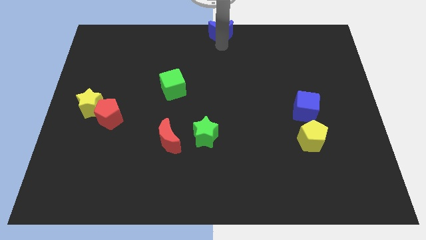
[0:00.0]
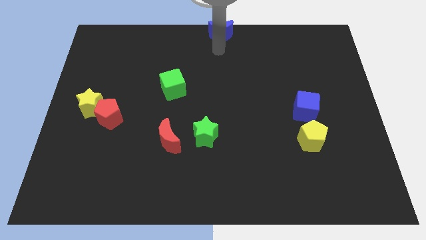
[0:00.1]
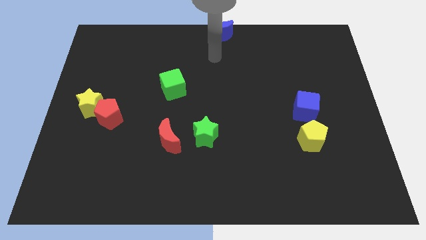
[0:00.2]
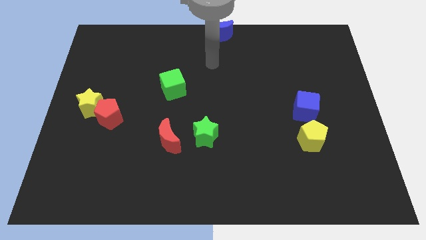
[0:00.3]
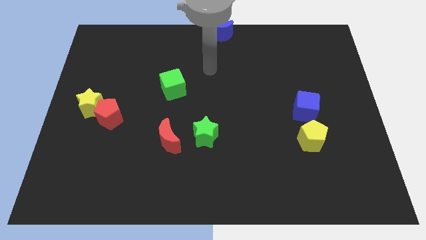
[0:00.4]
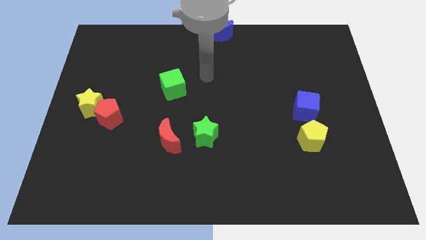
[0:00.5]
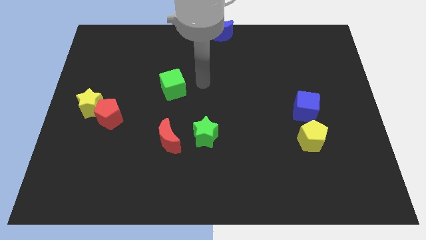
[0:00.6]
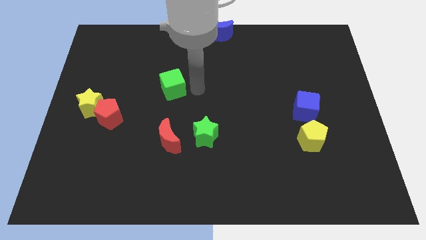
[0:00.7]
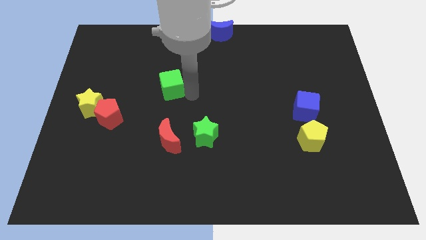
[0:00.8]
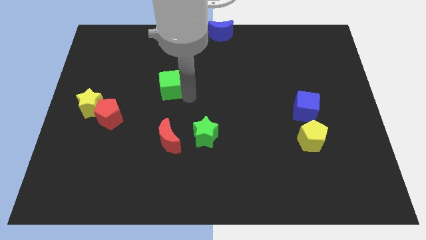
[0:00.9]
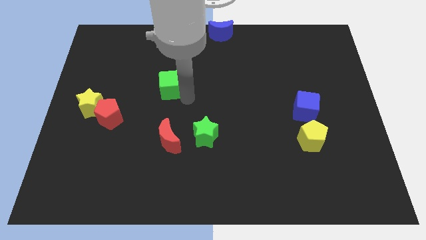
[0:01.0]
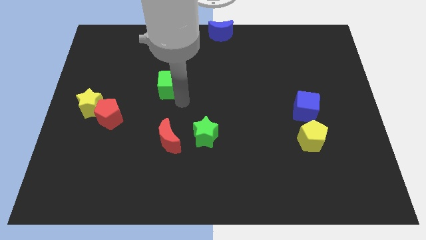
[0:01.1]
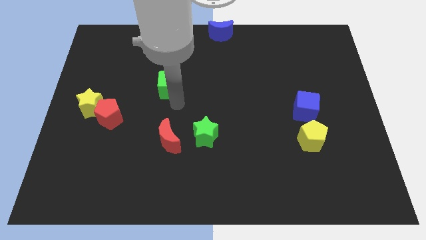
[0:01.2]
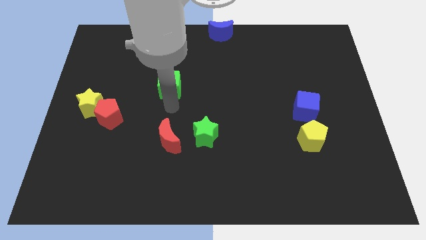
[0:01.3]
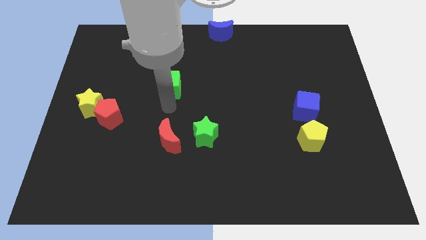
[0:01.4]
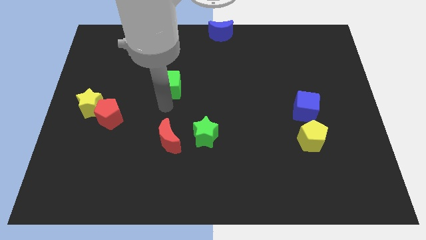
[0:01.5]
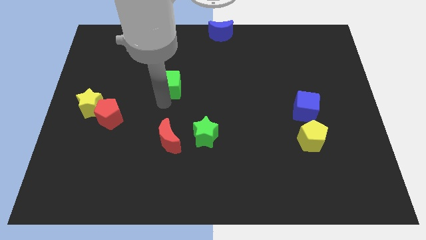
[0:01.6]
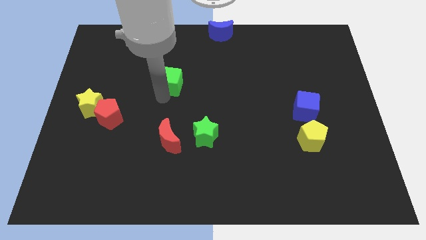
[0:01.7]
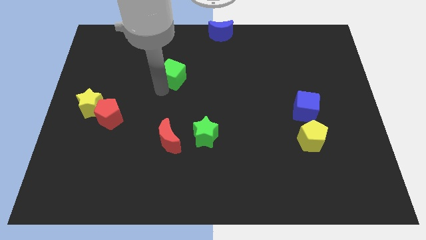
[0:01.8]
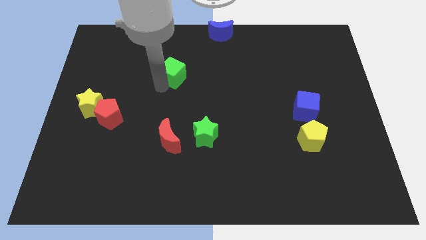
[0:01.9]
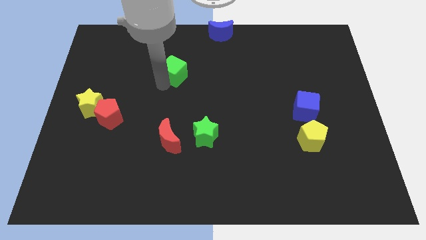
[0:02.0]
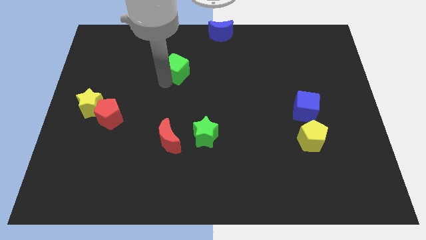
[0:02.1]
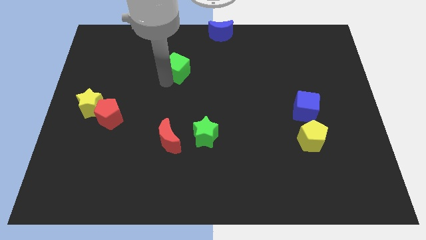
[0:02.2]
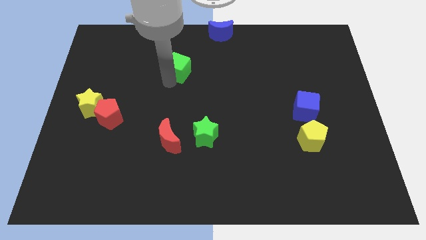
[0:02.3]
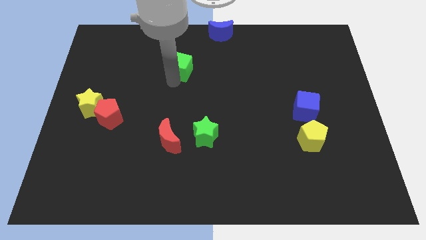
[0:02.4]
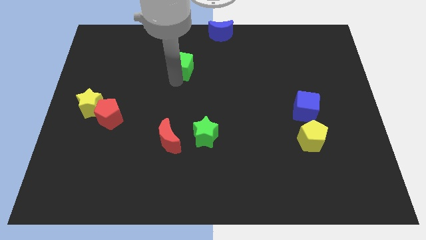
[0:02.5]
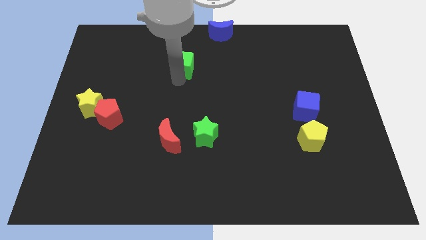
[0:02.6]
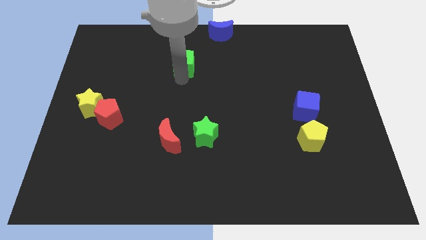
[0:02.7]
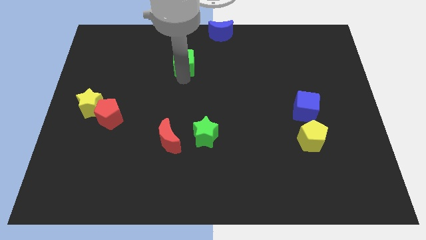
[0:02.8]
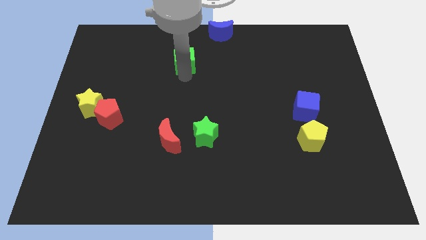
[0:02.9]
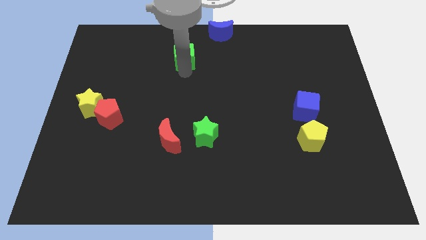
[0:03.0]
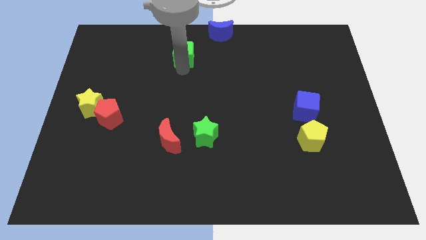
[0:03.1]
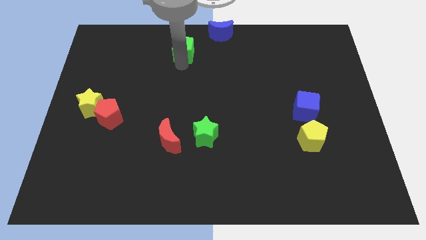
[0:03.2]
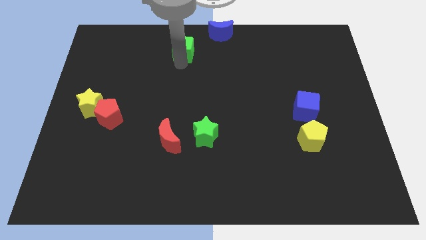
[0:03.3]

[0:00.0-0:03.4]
push the green cube to the bottom left of the blue crescent

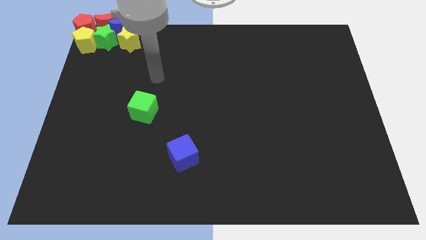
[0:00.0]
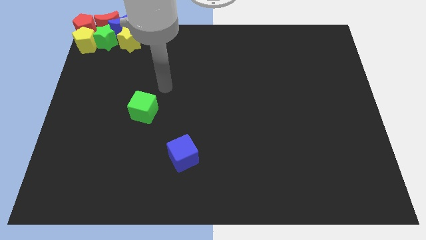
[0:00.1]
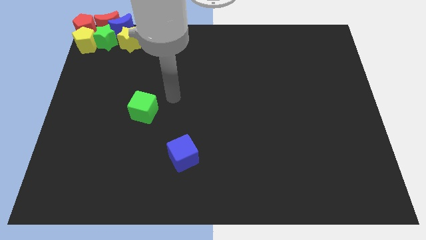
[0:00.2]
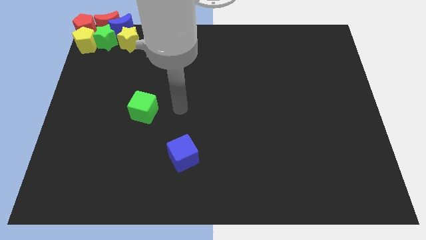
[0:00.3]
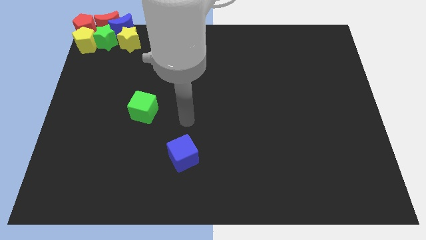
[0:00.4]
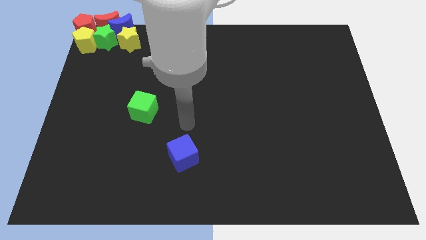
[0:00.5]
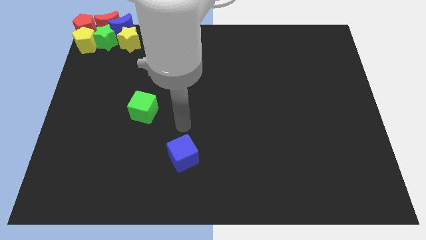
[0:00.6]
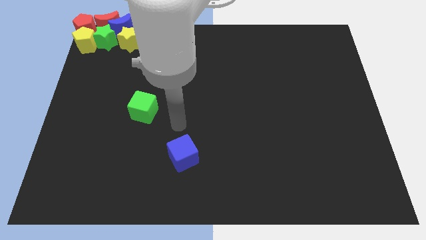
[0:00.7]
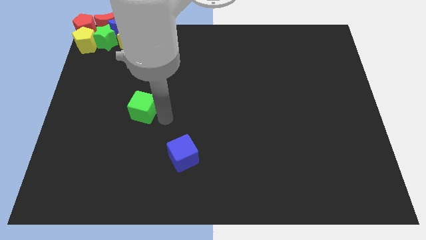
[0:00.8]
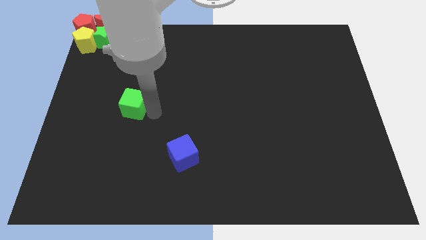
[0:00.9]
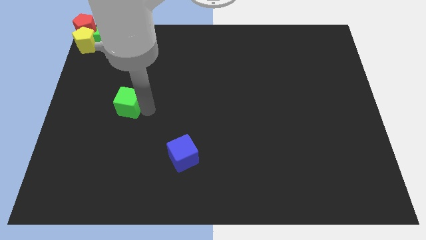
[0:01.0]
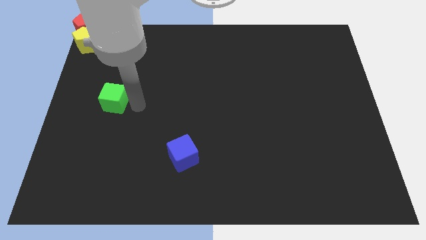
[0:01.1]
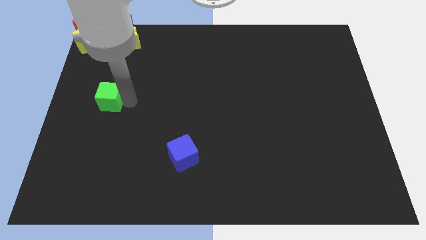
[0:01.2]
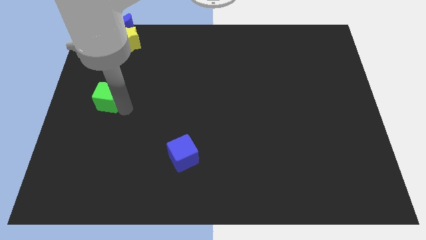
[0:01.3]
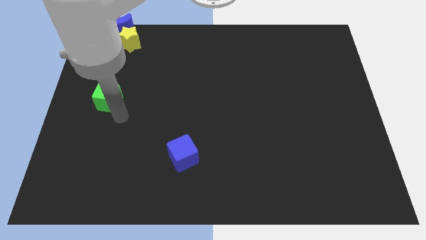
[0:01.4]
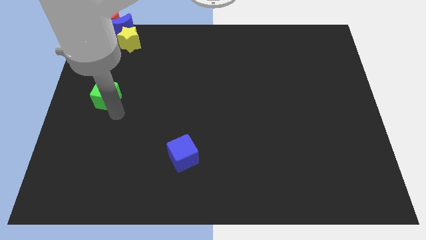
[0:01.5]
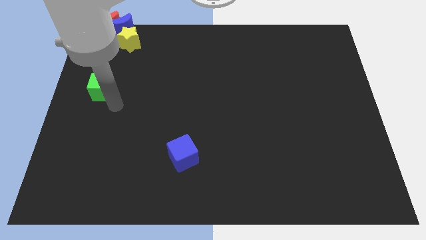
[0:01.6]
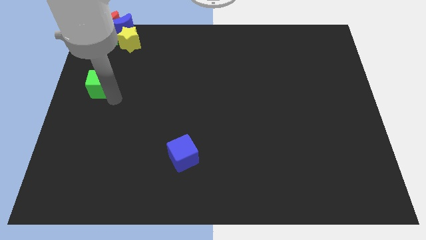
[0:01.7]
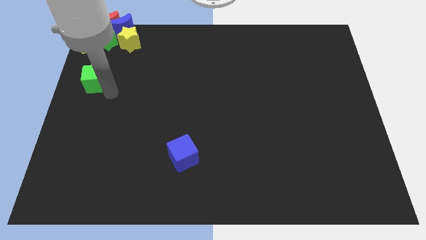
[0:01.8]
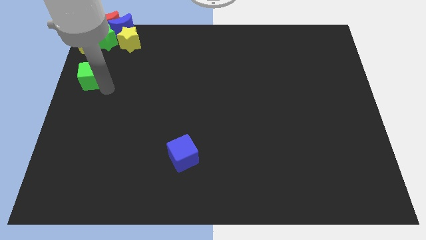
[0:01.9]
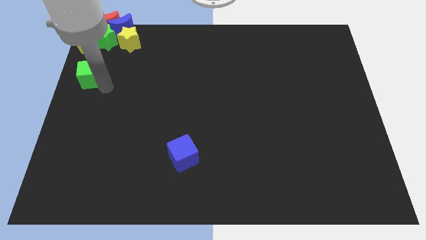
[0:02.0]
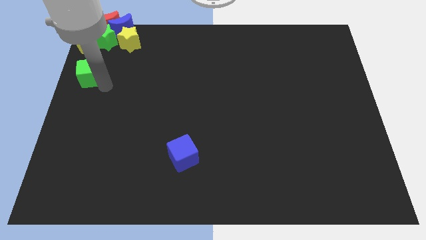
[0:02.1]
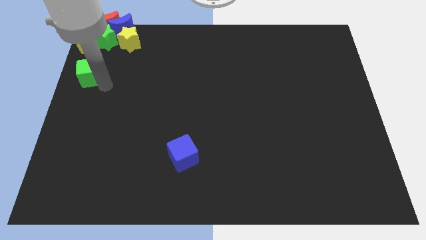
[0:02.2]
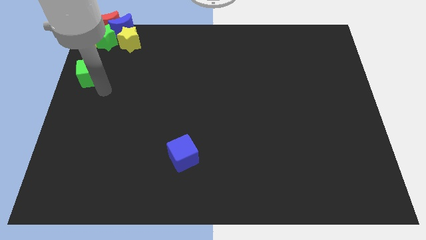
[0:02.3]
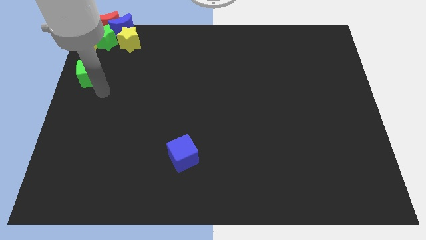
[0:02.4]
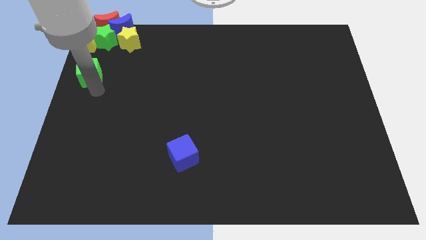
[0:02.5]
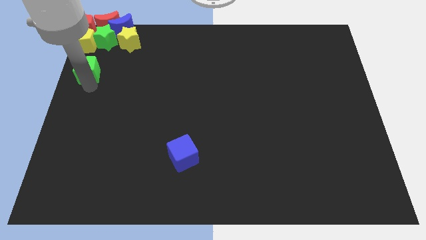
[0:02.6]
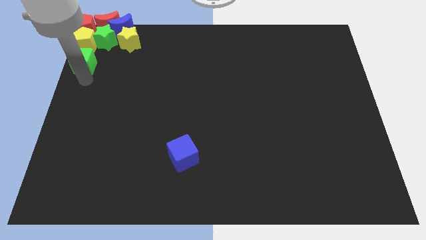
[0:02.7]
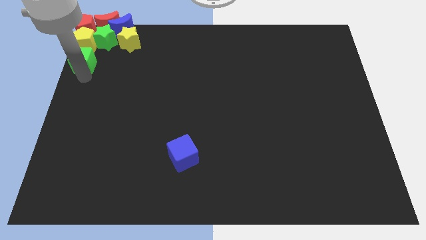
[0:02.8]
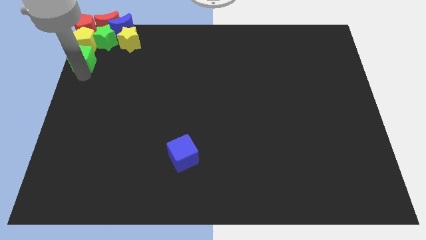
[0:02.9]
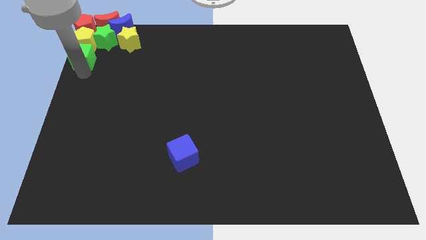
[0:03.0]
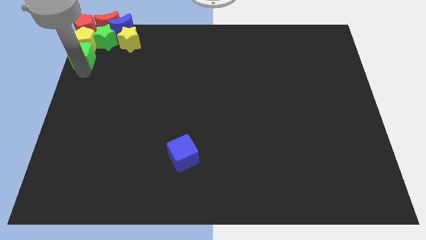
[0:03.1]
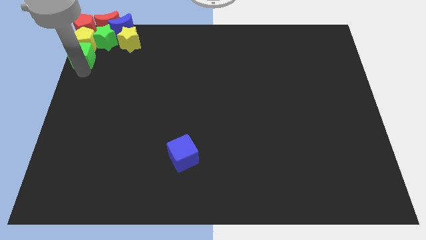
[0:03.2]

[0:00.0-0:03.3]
put the green cube underneath the yellow pentagon

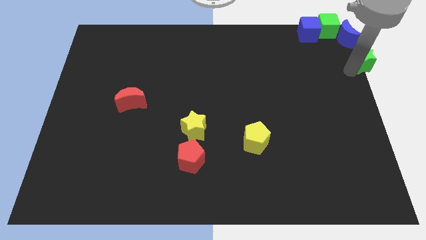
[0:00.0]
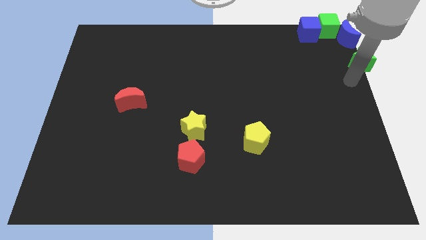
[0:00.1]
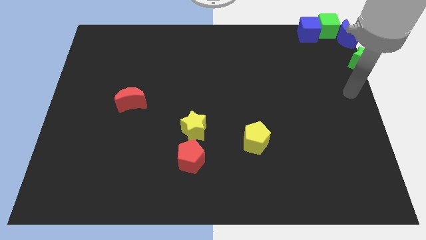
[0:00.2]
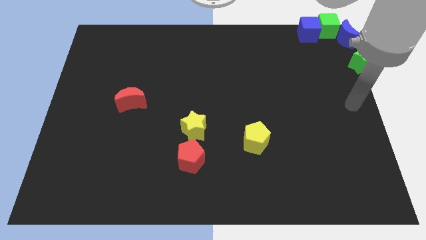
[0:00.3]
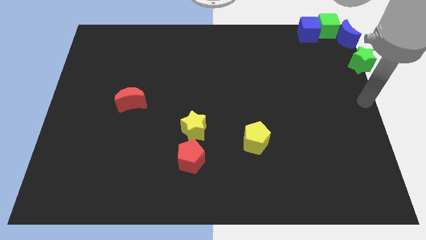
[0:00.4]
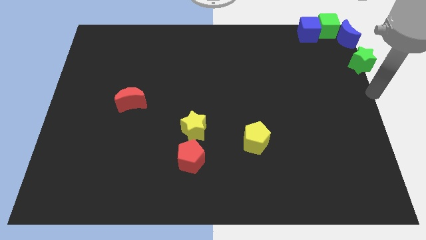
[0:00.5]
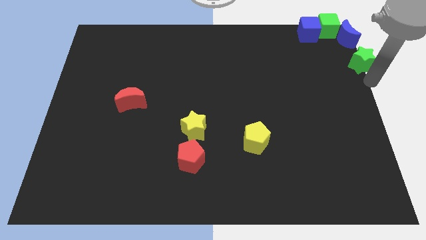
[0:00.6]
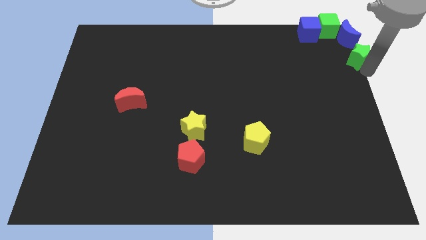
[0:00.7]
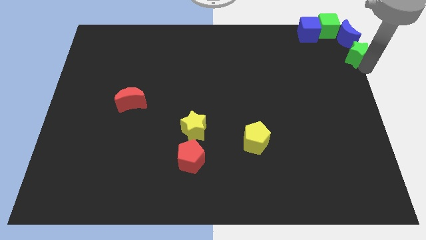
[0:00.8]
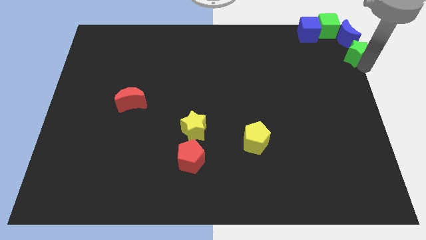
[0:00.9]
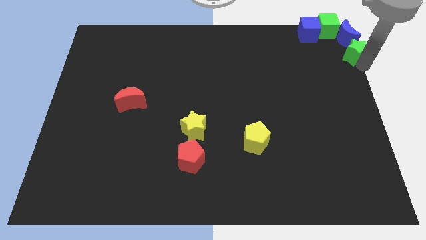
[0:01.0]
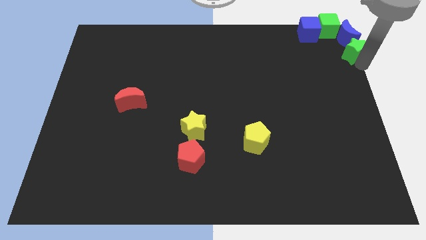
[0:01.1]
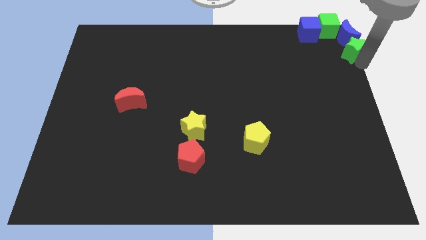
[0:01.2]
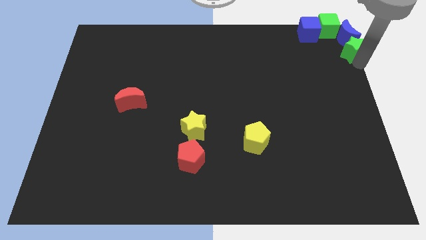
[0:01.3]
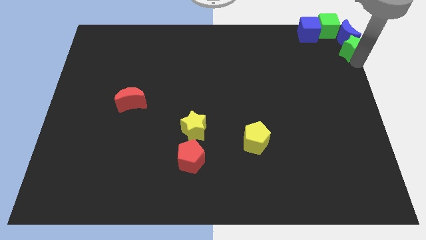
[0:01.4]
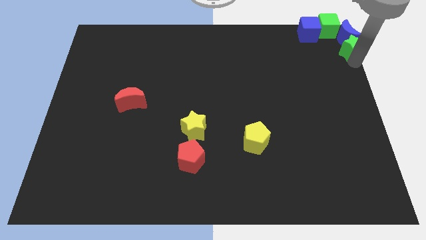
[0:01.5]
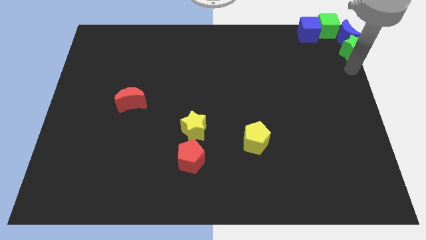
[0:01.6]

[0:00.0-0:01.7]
place the green star on the bottom of blue crescent
